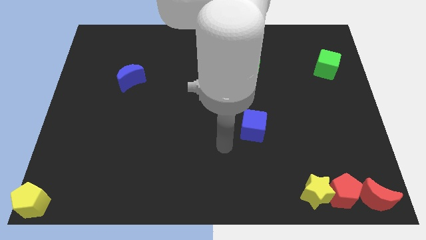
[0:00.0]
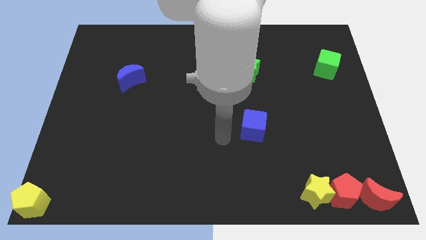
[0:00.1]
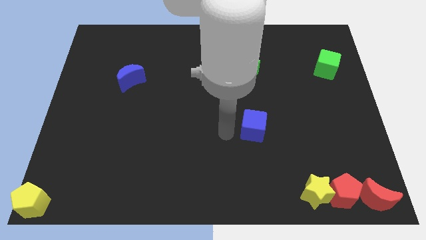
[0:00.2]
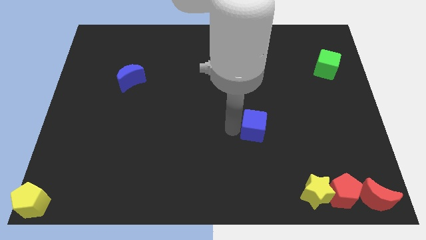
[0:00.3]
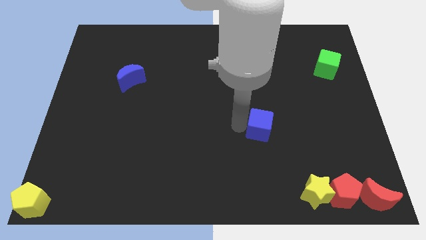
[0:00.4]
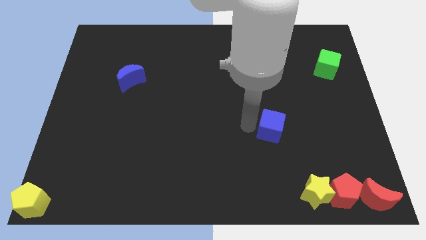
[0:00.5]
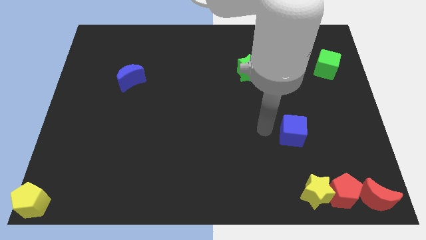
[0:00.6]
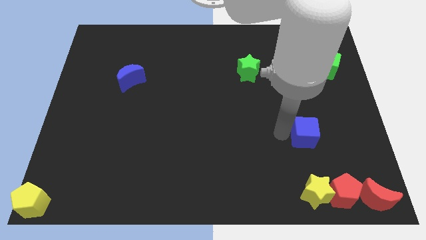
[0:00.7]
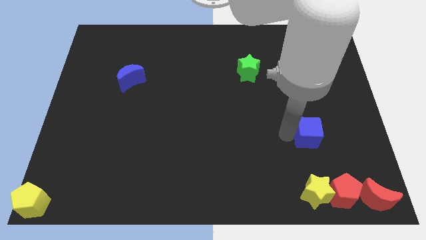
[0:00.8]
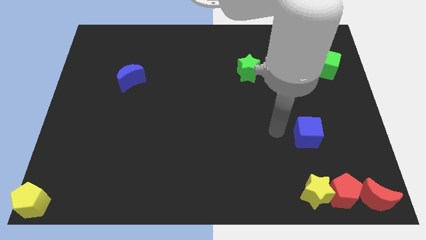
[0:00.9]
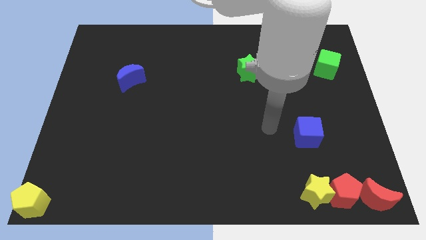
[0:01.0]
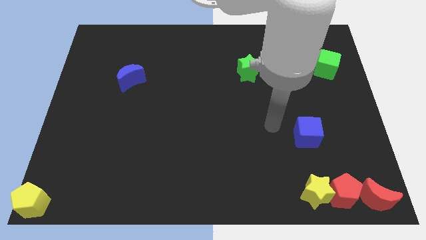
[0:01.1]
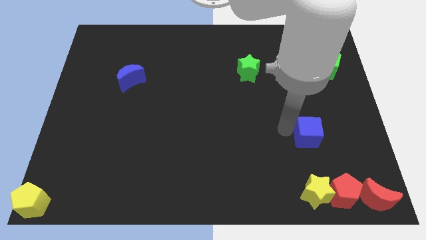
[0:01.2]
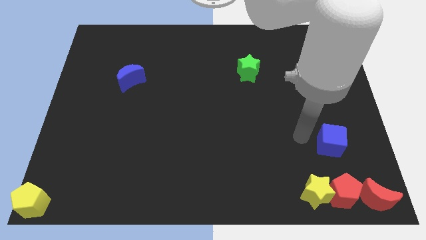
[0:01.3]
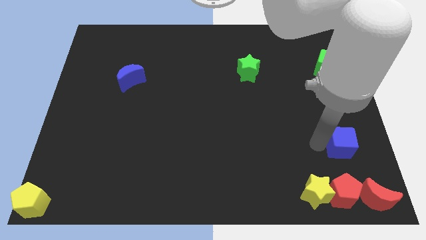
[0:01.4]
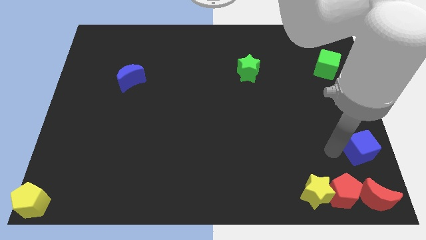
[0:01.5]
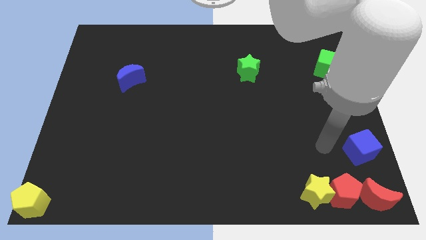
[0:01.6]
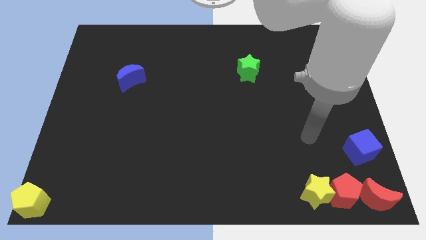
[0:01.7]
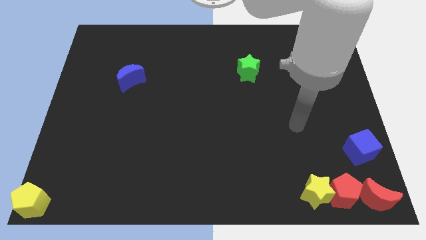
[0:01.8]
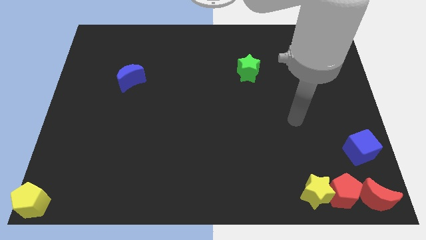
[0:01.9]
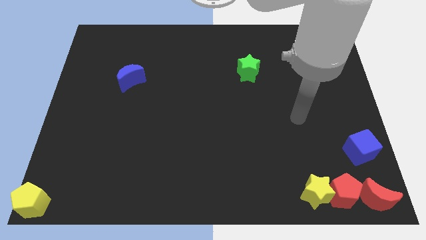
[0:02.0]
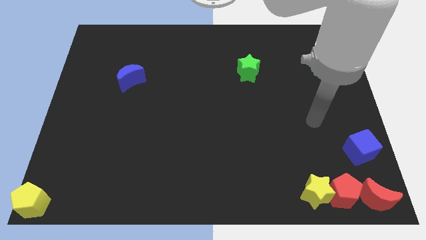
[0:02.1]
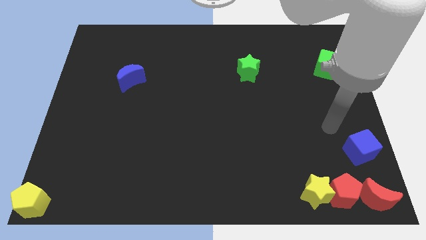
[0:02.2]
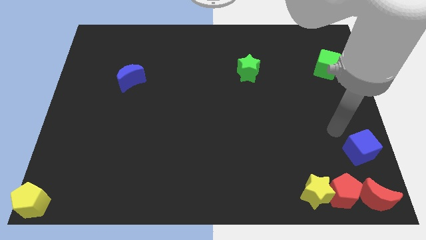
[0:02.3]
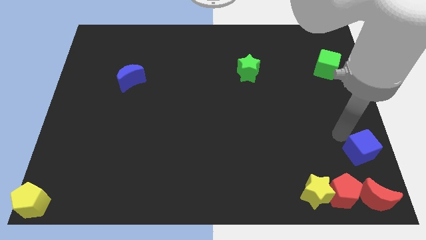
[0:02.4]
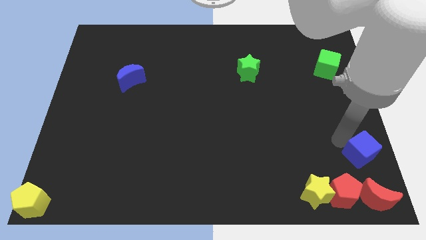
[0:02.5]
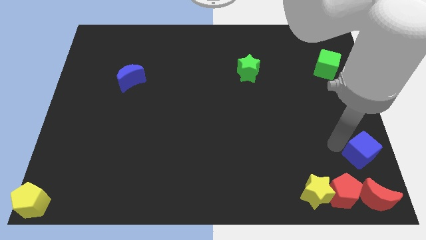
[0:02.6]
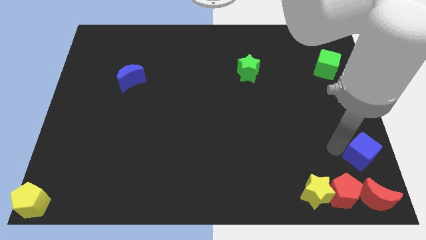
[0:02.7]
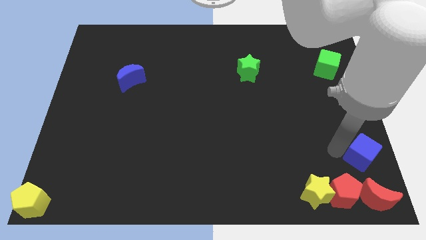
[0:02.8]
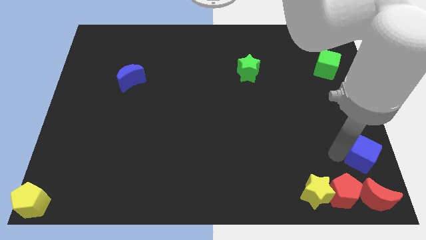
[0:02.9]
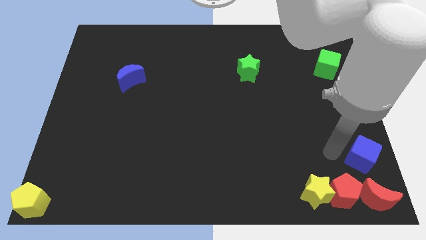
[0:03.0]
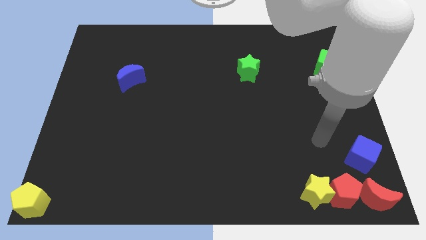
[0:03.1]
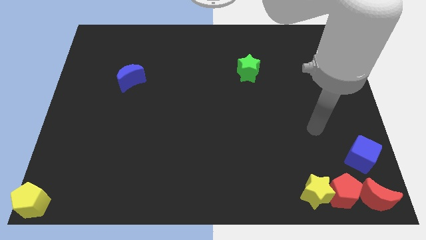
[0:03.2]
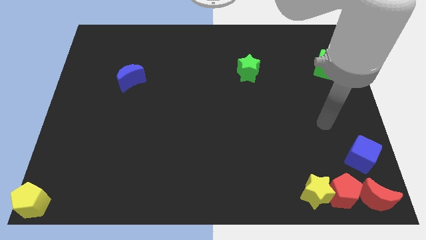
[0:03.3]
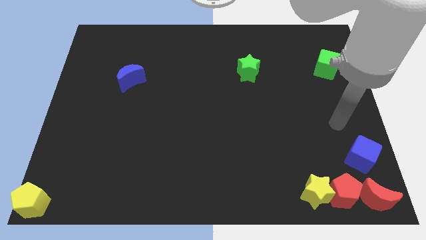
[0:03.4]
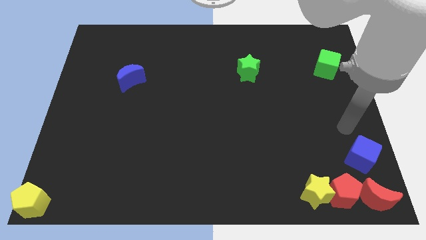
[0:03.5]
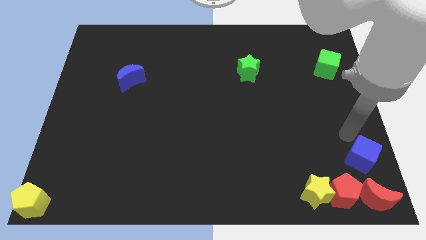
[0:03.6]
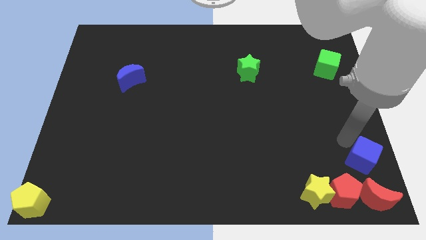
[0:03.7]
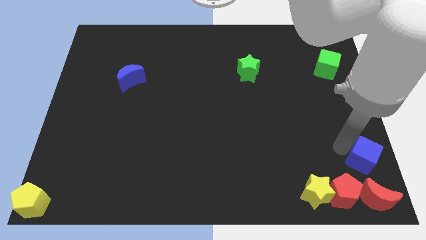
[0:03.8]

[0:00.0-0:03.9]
put the blue cube towards the top of the red crescent

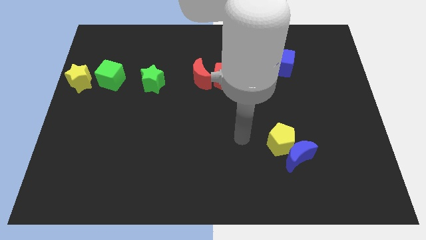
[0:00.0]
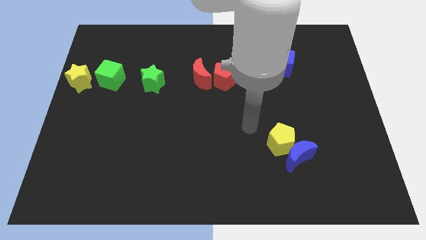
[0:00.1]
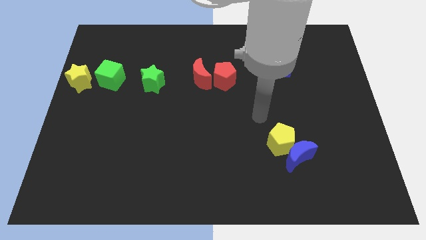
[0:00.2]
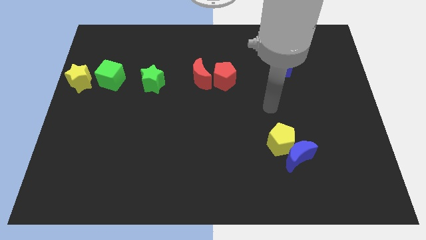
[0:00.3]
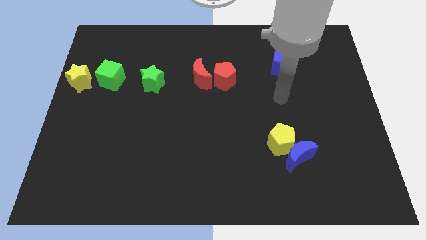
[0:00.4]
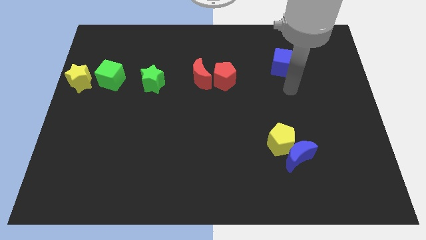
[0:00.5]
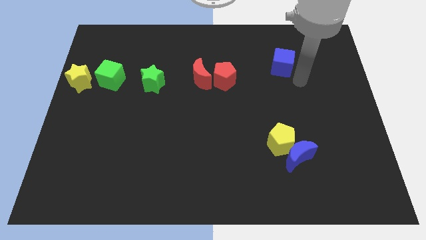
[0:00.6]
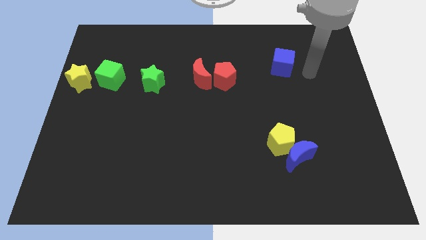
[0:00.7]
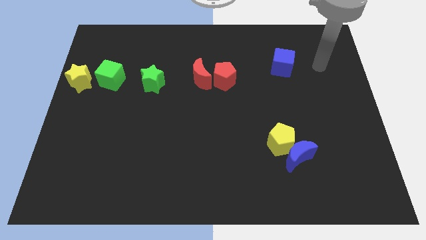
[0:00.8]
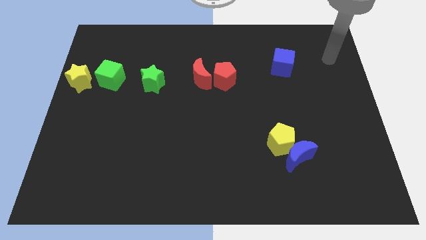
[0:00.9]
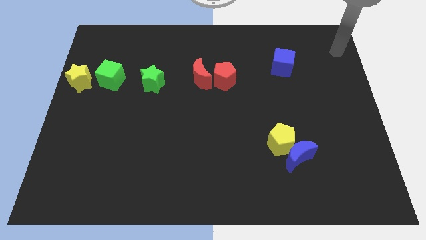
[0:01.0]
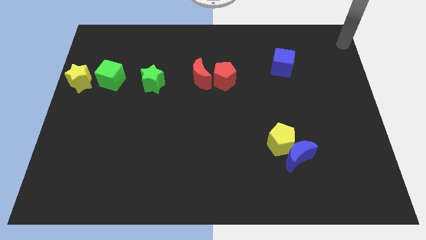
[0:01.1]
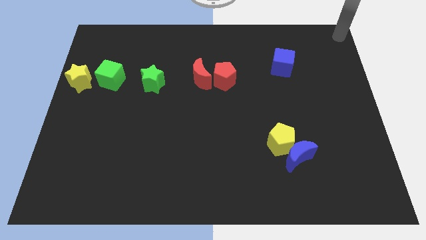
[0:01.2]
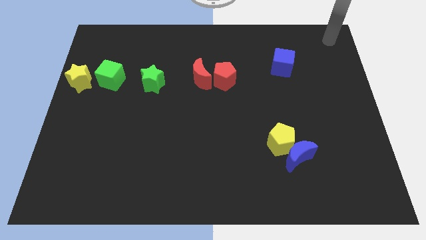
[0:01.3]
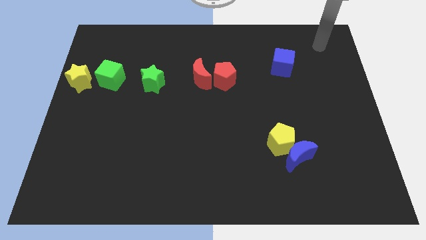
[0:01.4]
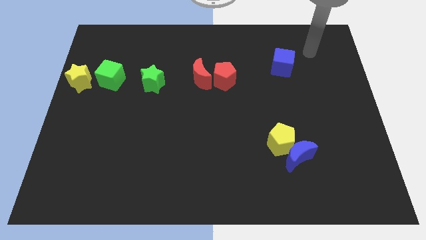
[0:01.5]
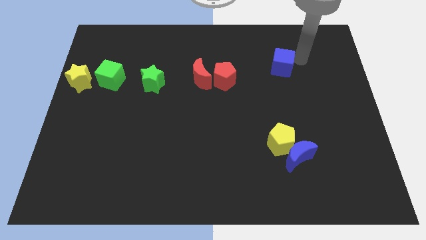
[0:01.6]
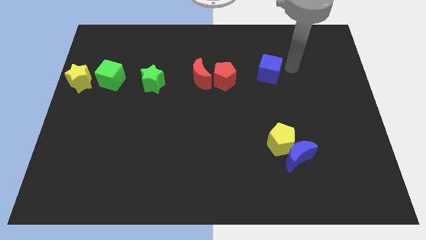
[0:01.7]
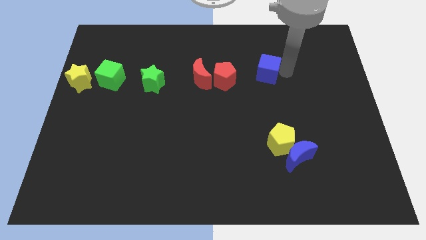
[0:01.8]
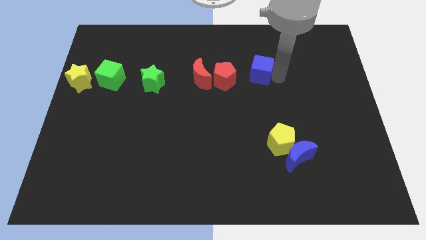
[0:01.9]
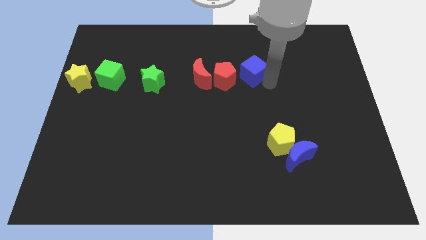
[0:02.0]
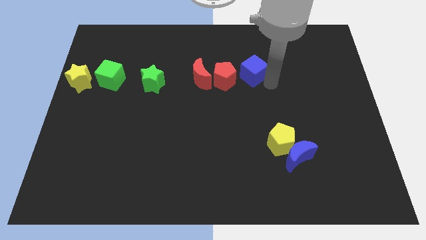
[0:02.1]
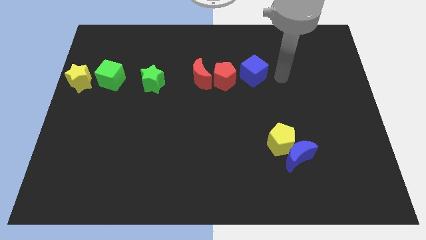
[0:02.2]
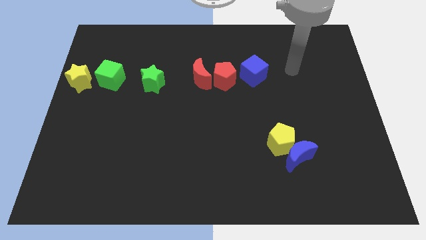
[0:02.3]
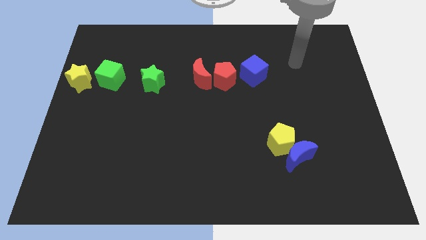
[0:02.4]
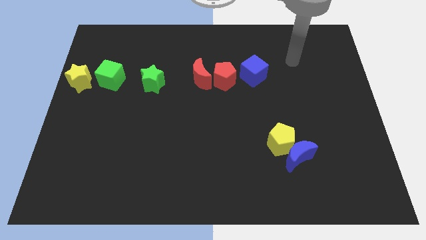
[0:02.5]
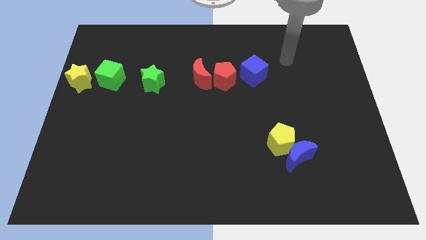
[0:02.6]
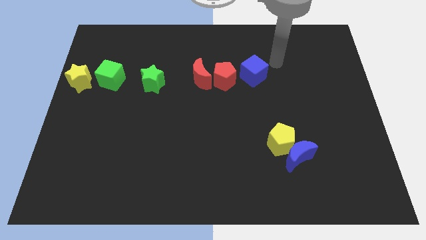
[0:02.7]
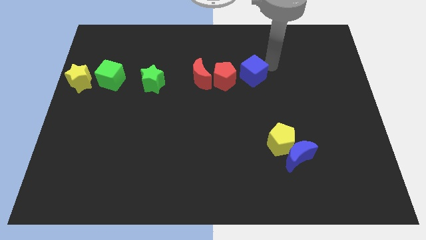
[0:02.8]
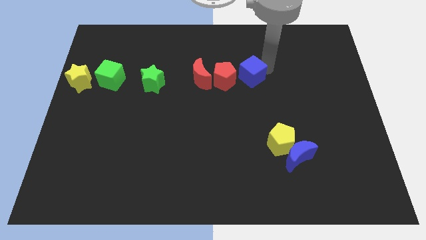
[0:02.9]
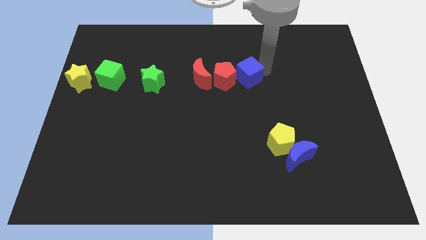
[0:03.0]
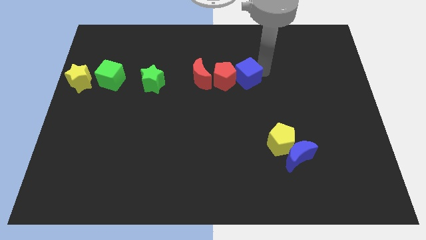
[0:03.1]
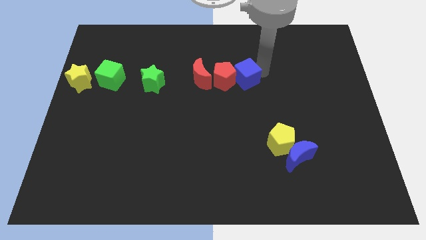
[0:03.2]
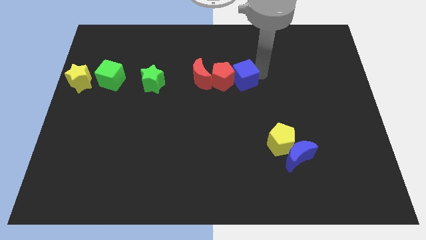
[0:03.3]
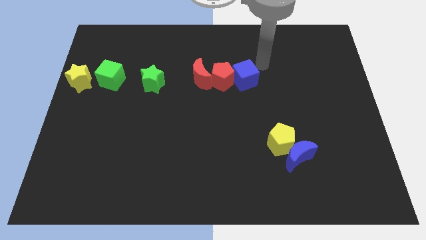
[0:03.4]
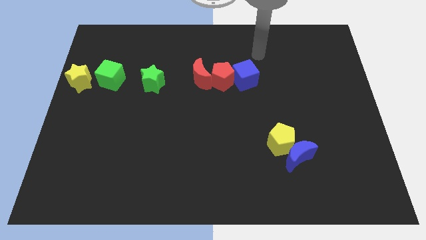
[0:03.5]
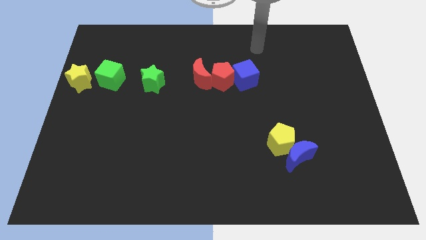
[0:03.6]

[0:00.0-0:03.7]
push the blue cube into the red pentagon

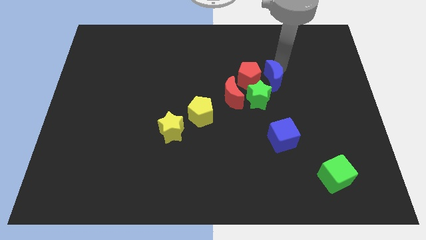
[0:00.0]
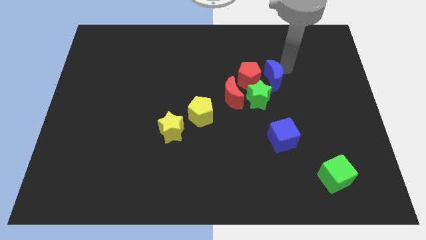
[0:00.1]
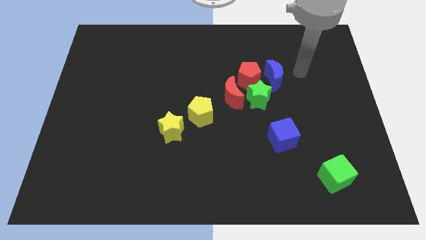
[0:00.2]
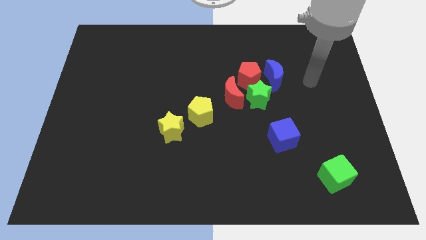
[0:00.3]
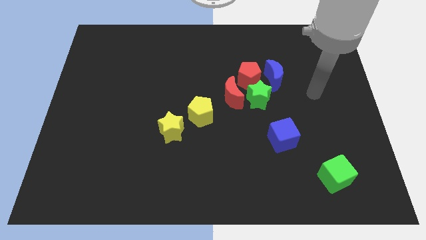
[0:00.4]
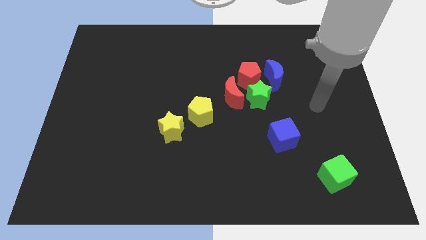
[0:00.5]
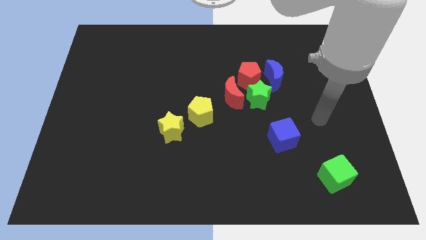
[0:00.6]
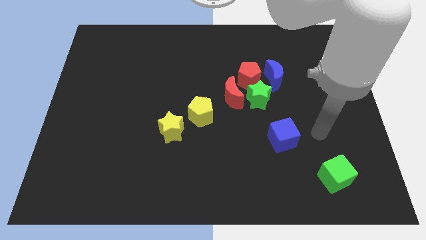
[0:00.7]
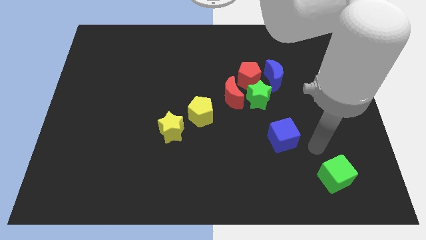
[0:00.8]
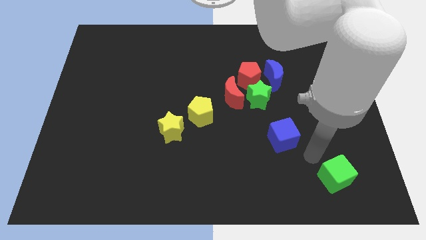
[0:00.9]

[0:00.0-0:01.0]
go away from the blue moon

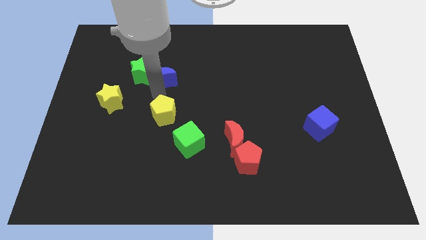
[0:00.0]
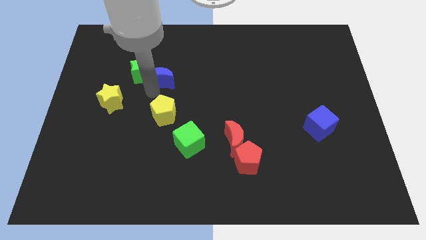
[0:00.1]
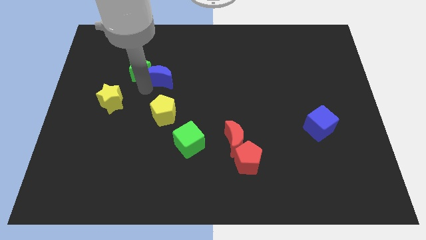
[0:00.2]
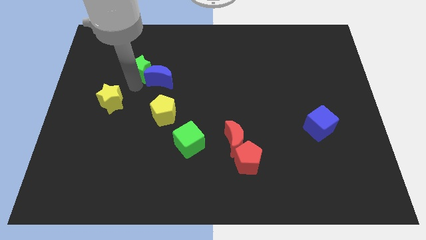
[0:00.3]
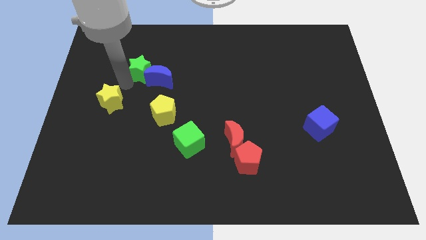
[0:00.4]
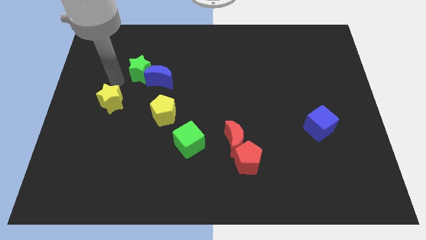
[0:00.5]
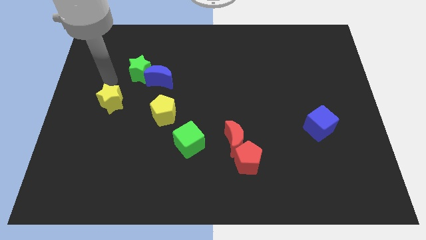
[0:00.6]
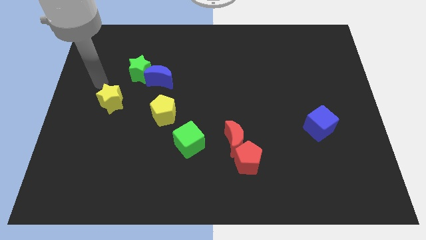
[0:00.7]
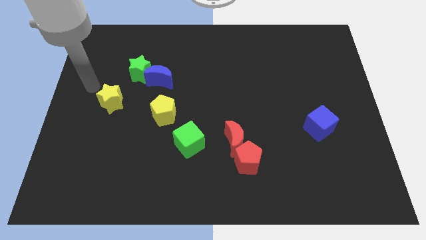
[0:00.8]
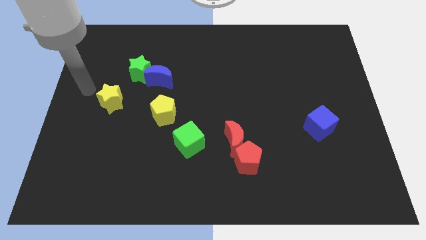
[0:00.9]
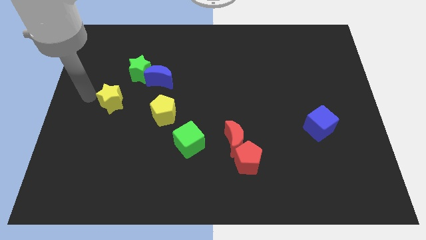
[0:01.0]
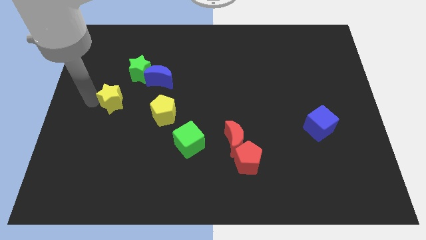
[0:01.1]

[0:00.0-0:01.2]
place your arm close to yellow star
